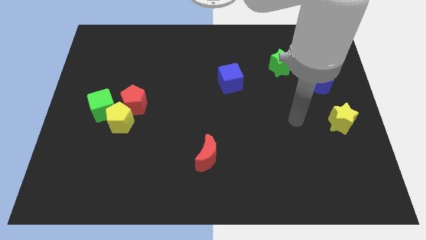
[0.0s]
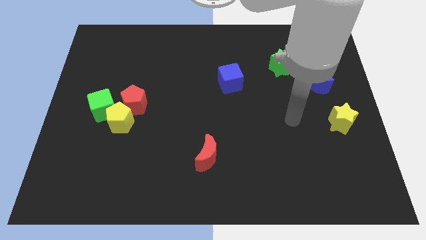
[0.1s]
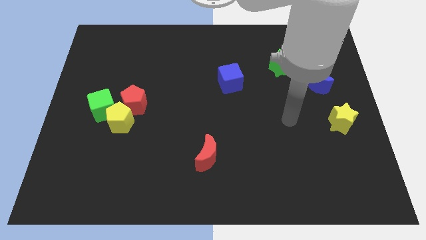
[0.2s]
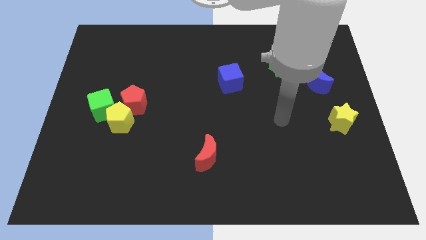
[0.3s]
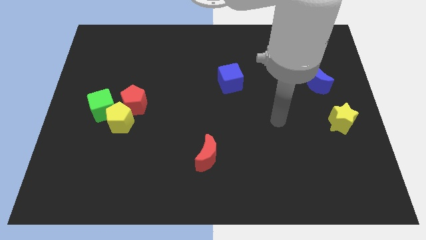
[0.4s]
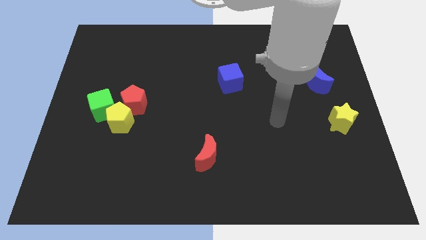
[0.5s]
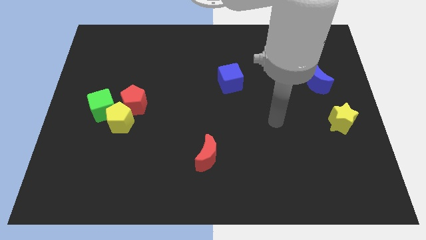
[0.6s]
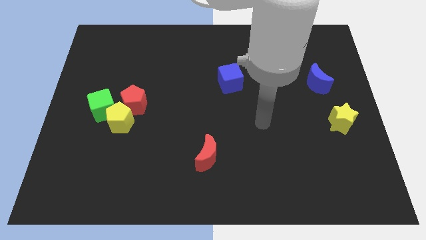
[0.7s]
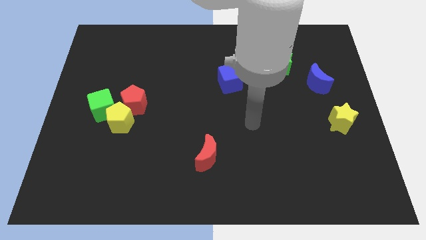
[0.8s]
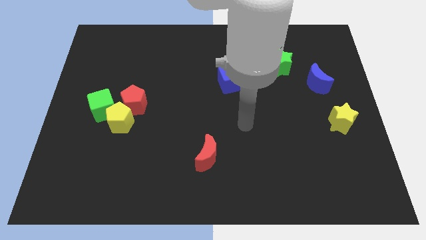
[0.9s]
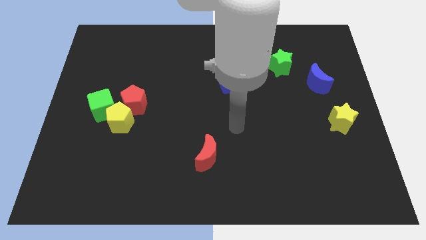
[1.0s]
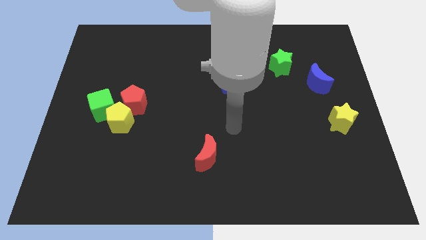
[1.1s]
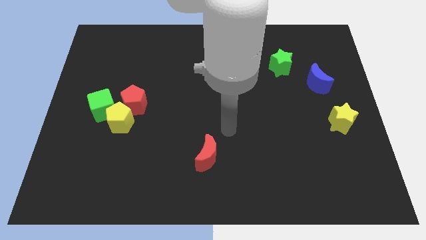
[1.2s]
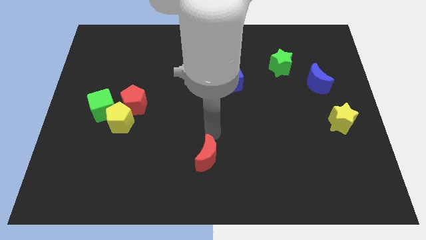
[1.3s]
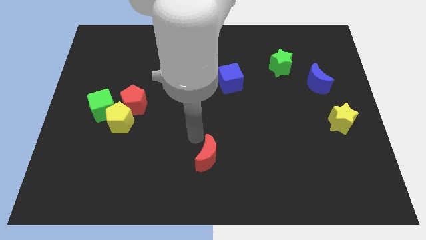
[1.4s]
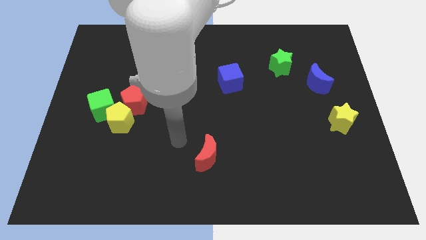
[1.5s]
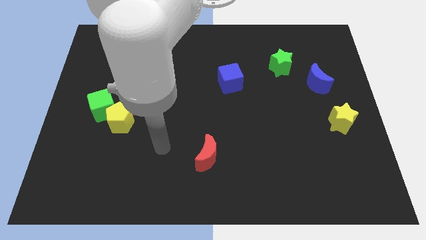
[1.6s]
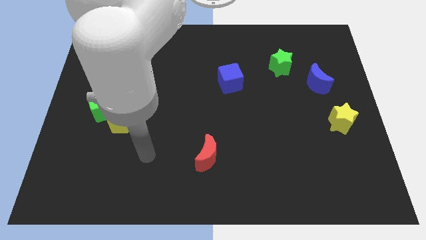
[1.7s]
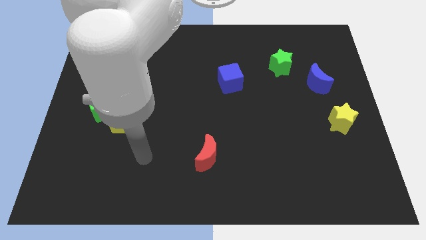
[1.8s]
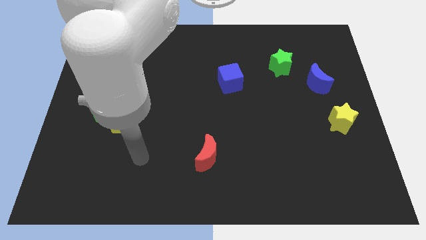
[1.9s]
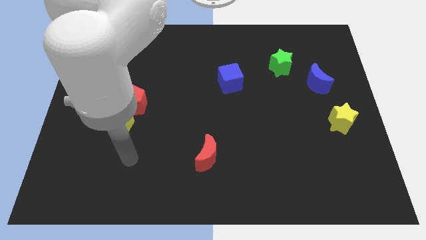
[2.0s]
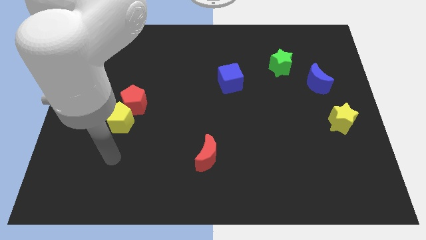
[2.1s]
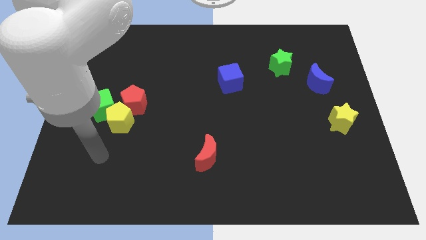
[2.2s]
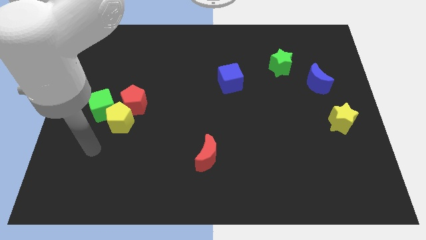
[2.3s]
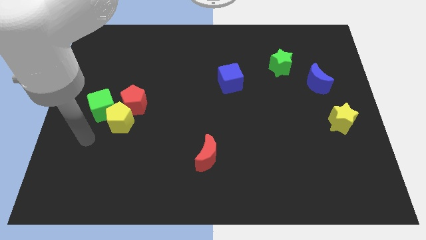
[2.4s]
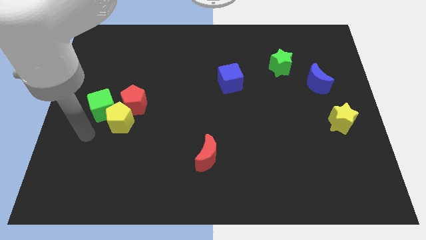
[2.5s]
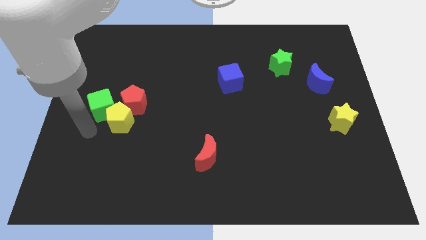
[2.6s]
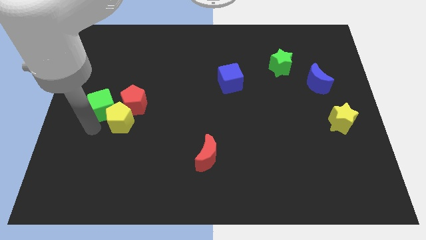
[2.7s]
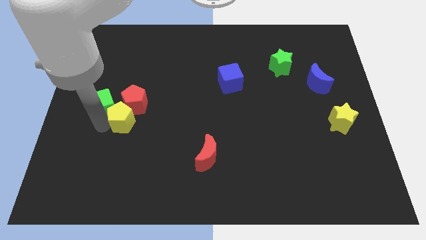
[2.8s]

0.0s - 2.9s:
move your arm left to the yellow pentagon

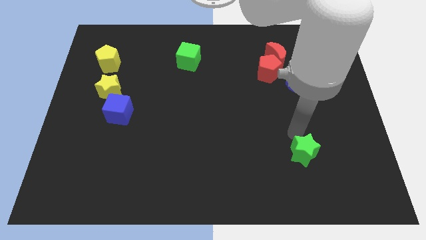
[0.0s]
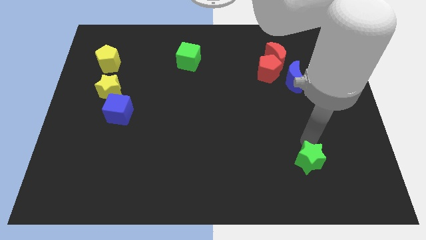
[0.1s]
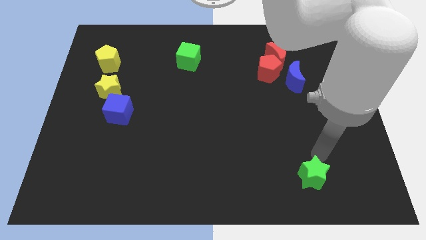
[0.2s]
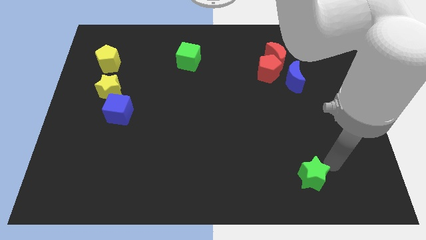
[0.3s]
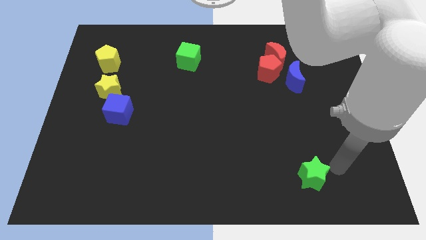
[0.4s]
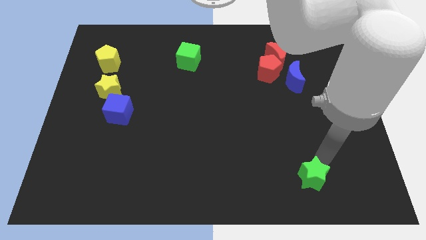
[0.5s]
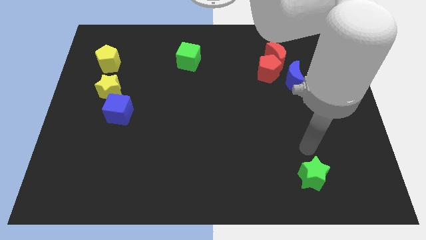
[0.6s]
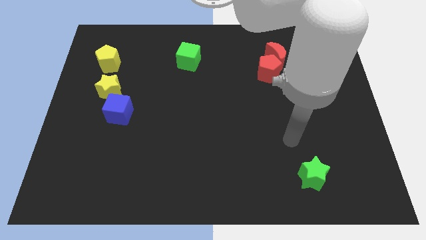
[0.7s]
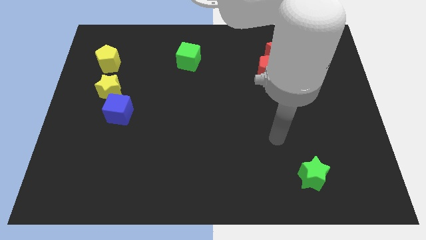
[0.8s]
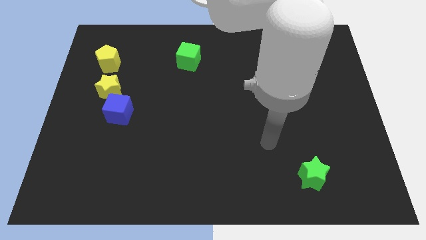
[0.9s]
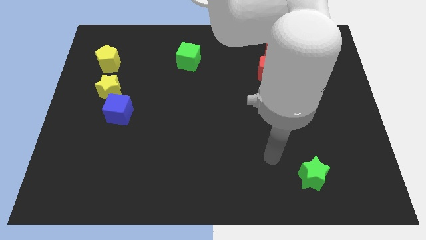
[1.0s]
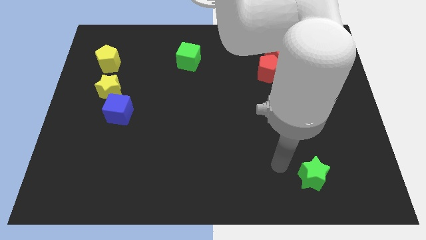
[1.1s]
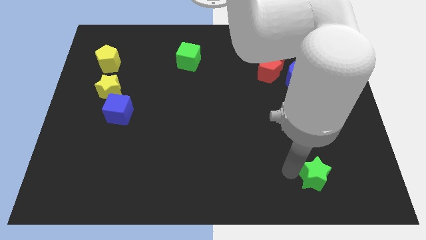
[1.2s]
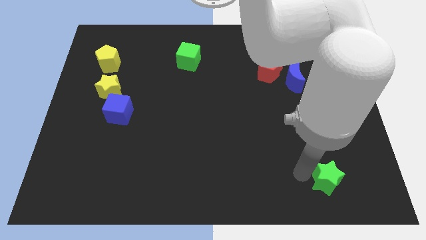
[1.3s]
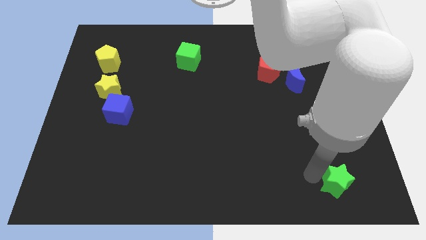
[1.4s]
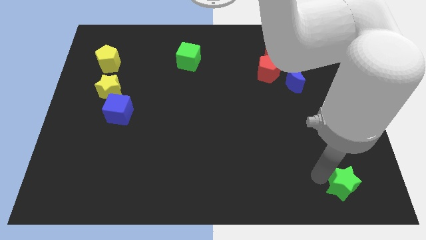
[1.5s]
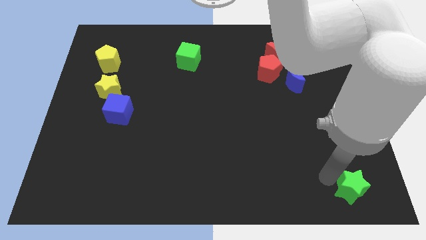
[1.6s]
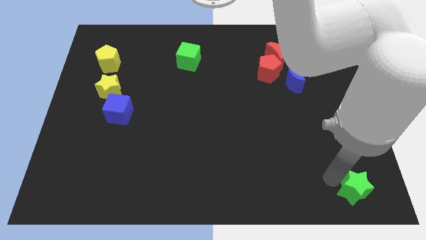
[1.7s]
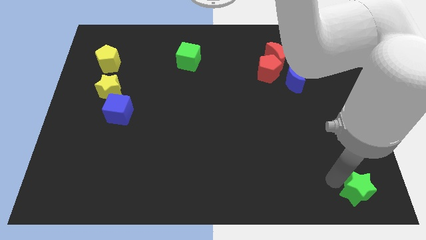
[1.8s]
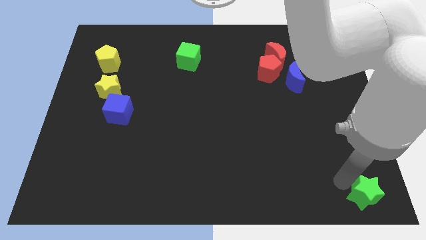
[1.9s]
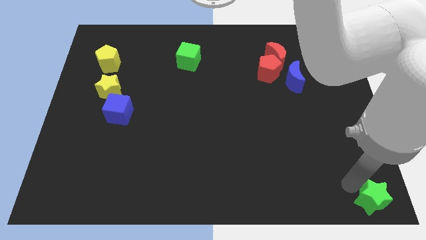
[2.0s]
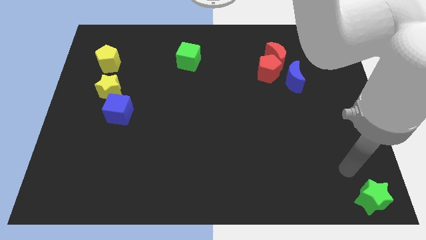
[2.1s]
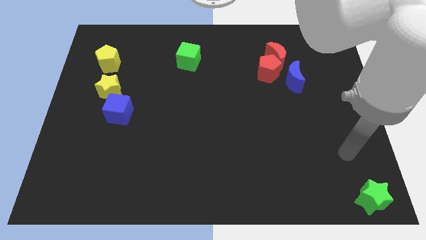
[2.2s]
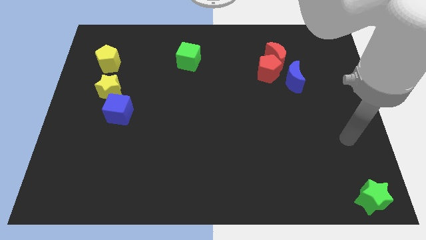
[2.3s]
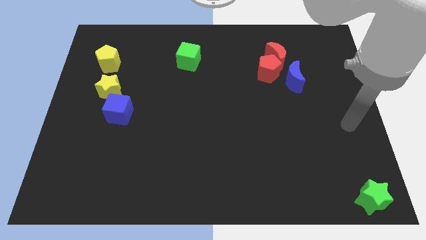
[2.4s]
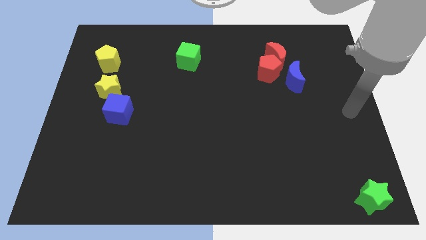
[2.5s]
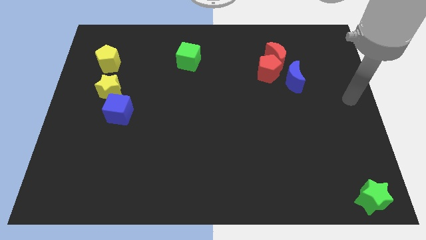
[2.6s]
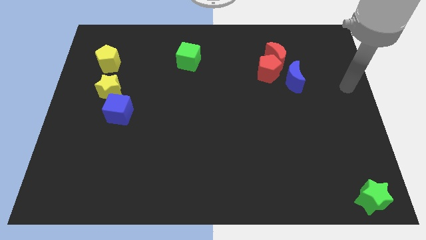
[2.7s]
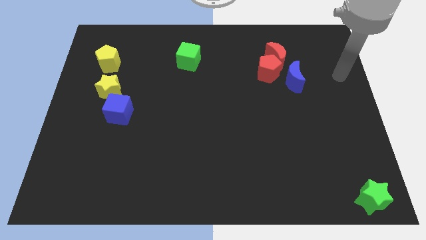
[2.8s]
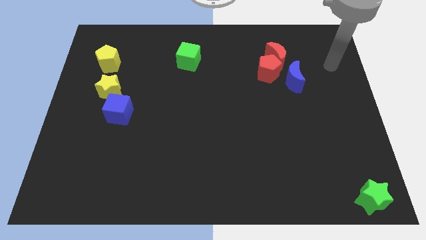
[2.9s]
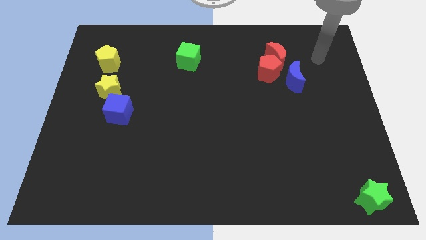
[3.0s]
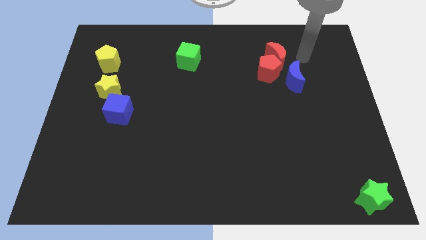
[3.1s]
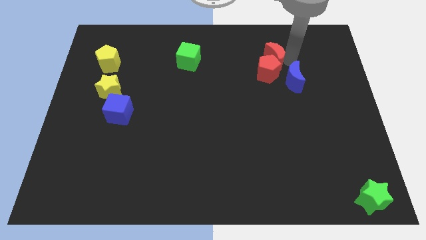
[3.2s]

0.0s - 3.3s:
push the green star to the bottom right of the board

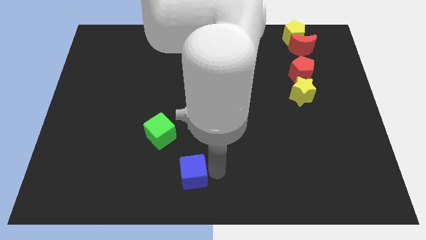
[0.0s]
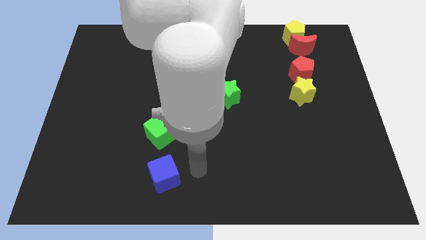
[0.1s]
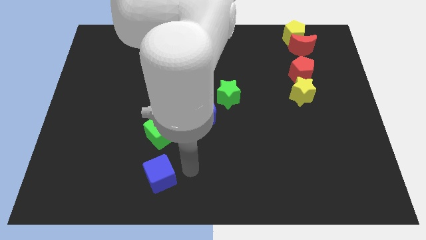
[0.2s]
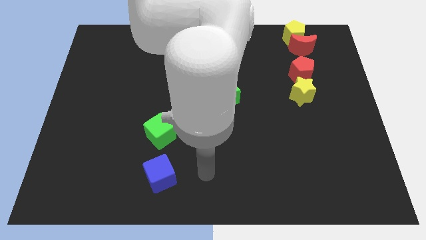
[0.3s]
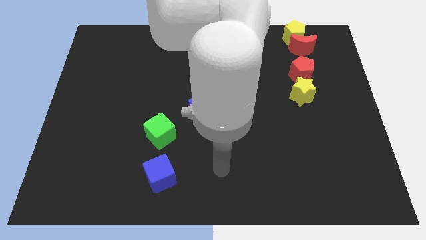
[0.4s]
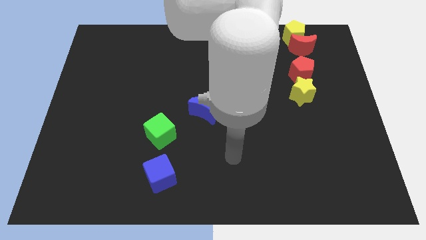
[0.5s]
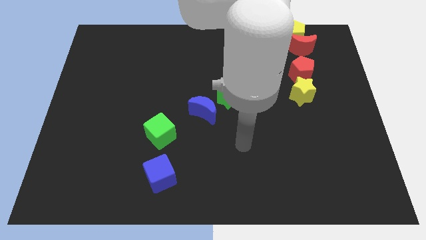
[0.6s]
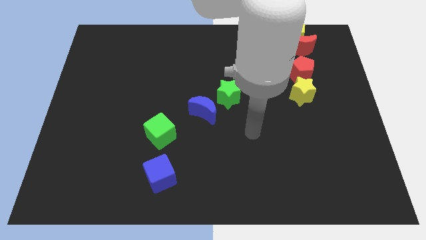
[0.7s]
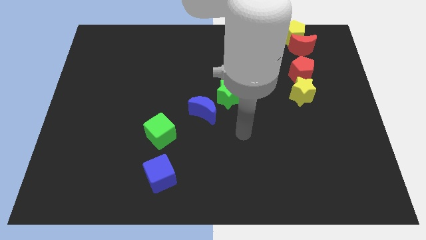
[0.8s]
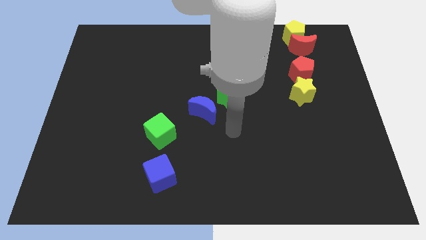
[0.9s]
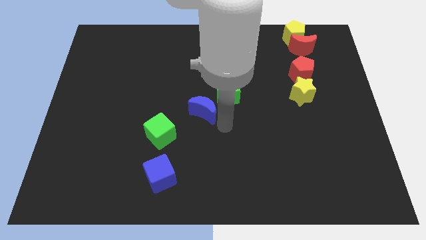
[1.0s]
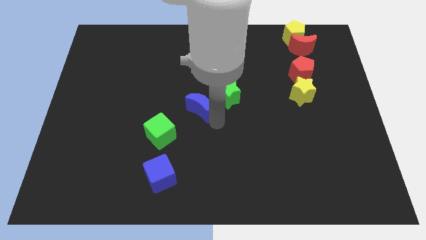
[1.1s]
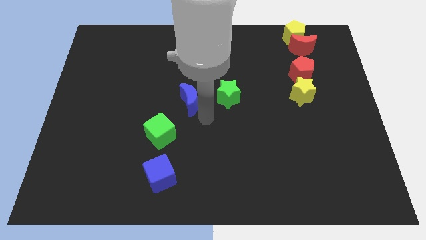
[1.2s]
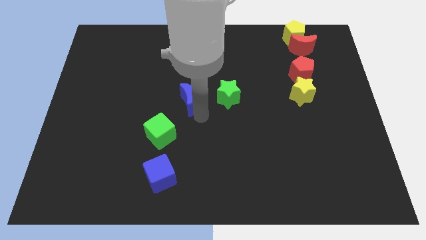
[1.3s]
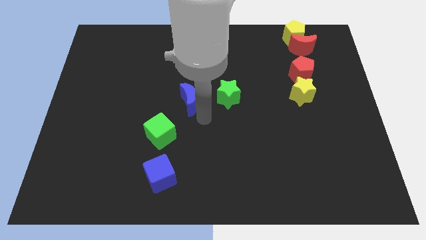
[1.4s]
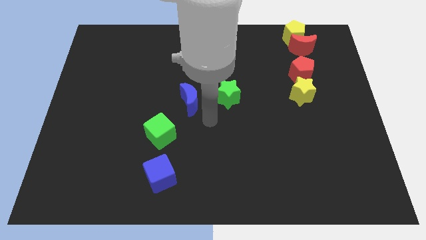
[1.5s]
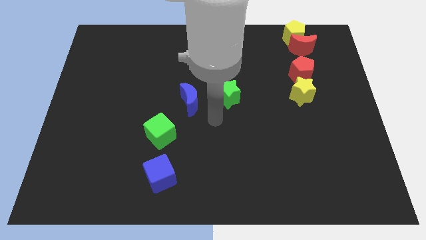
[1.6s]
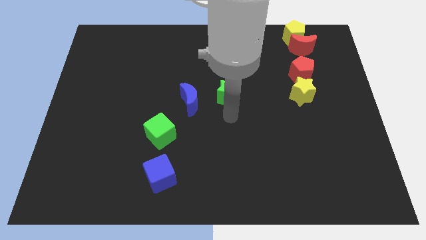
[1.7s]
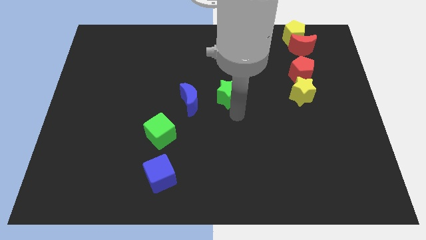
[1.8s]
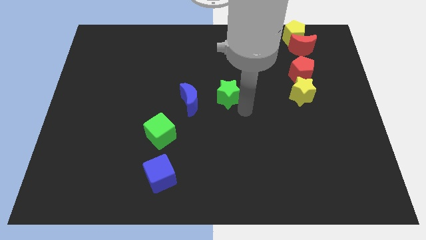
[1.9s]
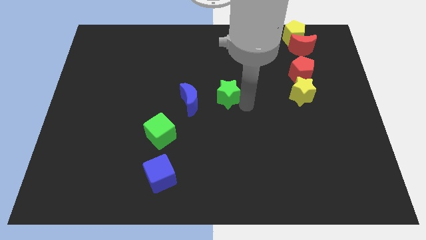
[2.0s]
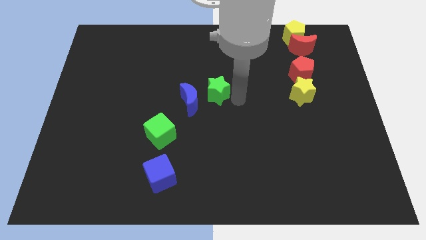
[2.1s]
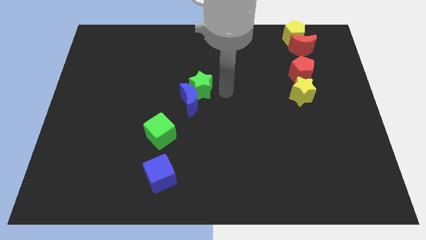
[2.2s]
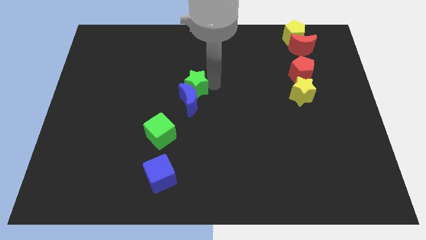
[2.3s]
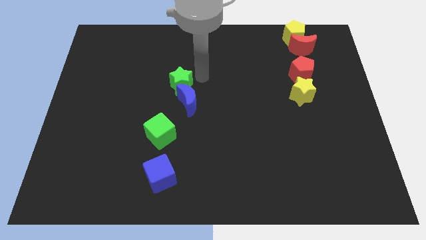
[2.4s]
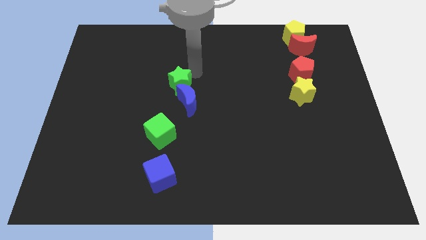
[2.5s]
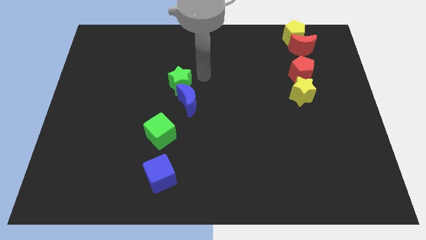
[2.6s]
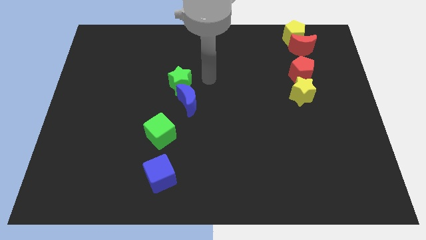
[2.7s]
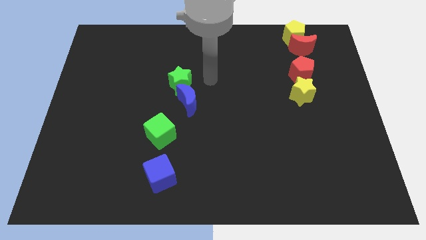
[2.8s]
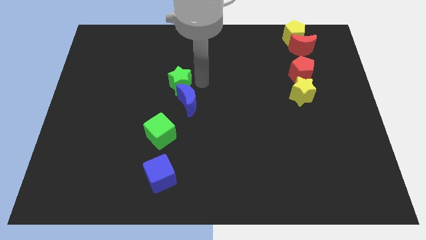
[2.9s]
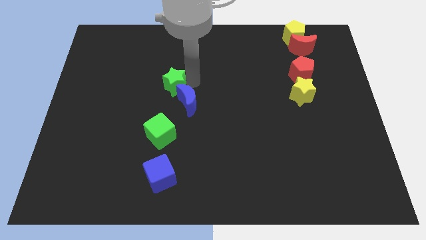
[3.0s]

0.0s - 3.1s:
move the blue cube blue moongreen star to left side
